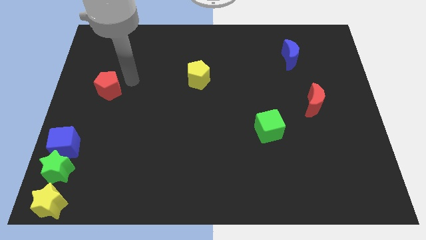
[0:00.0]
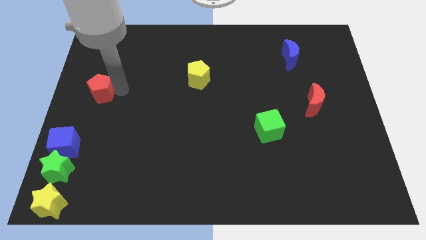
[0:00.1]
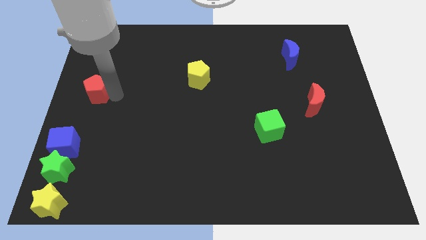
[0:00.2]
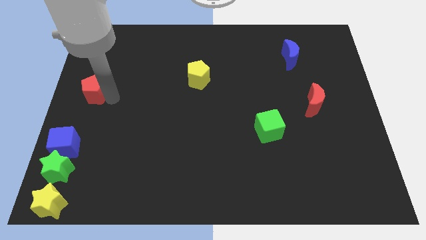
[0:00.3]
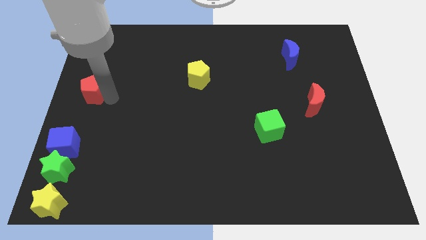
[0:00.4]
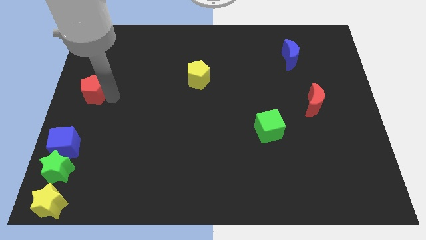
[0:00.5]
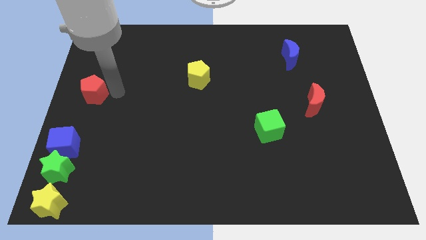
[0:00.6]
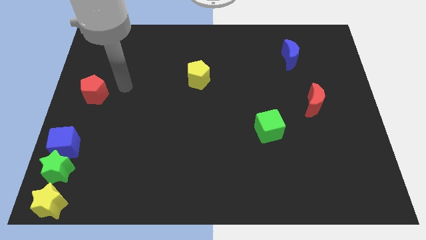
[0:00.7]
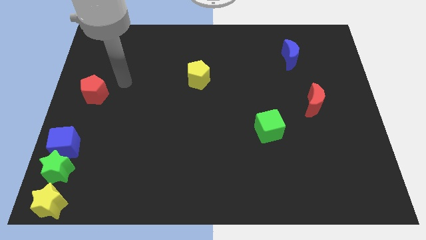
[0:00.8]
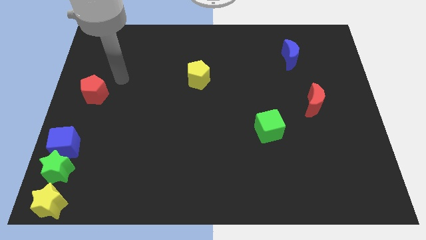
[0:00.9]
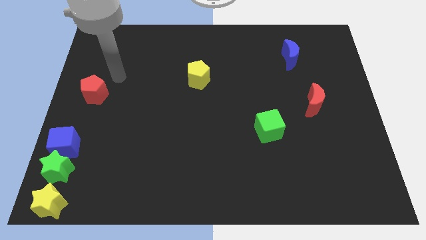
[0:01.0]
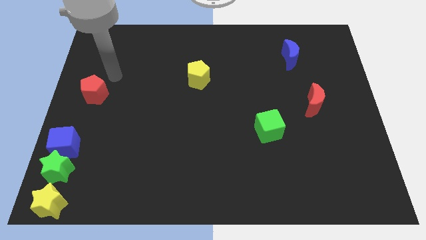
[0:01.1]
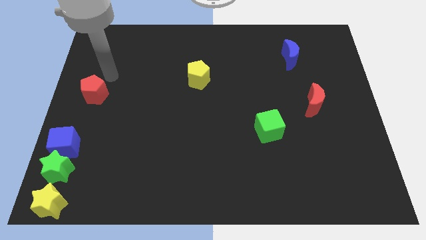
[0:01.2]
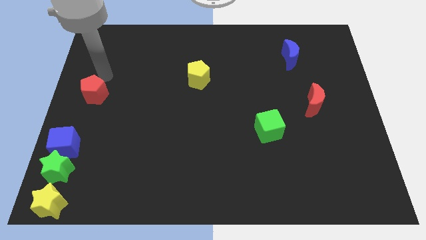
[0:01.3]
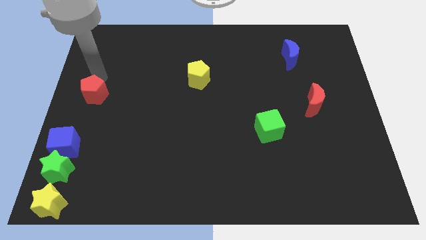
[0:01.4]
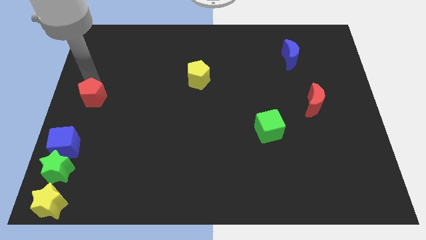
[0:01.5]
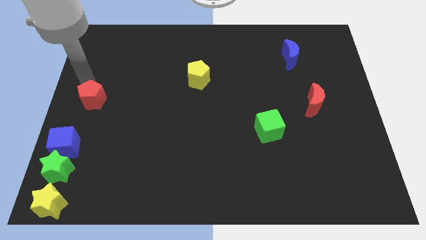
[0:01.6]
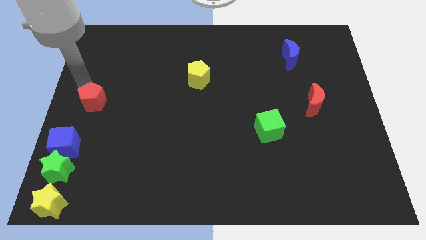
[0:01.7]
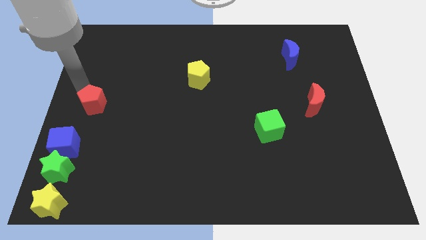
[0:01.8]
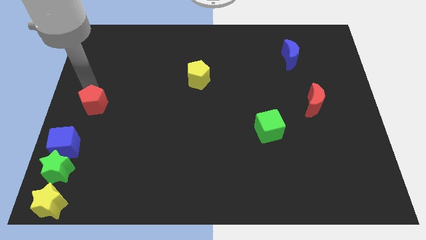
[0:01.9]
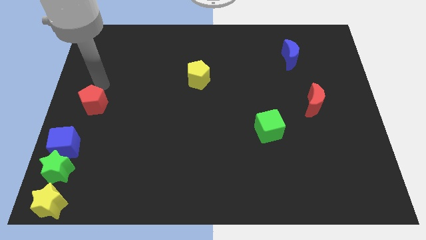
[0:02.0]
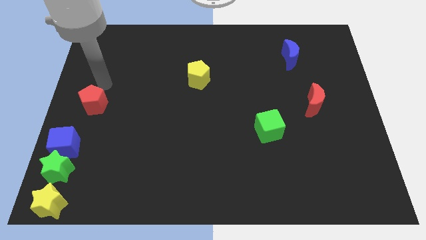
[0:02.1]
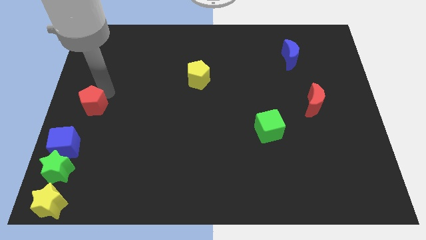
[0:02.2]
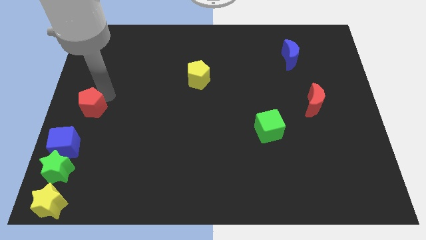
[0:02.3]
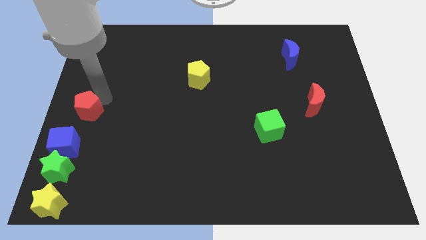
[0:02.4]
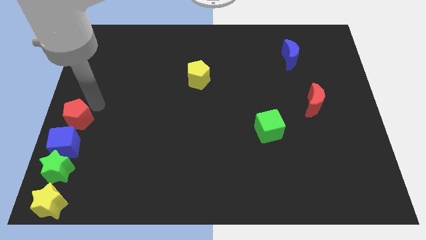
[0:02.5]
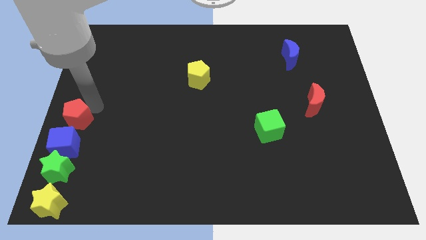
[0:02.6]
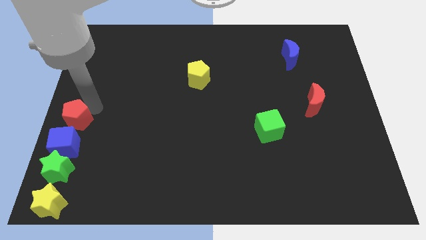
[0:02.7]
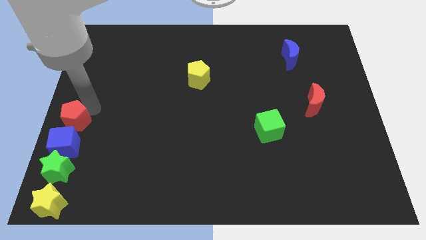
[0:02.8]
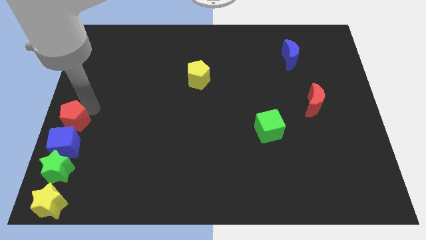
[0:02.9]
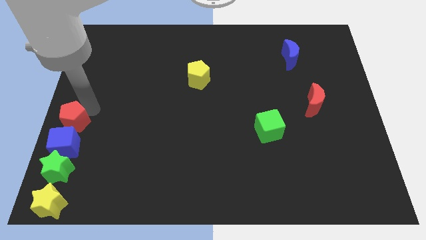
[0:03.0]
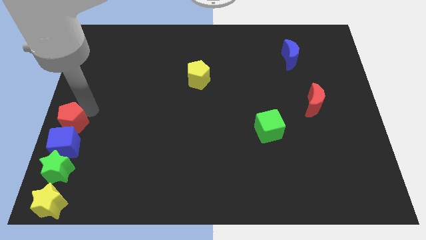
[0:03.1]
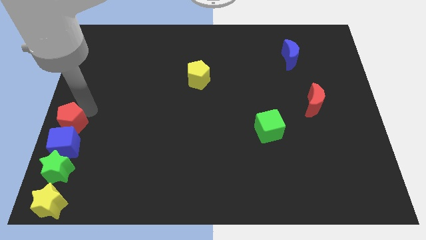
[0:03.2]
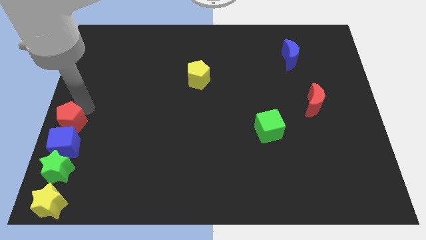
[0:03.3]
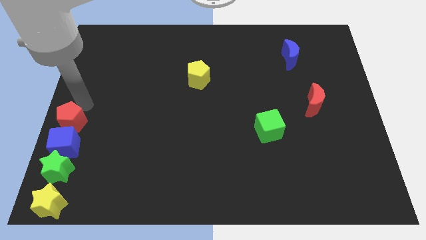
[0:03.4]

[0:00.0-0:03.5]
push the red pentagon to the top of the blue cube

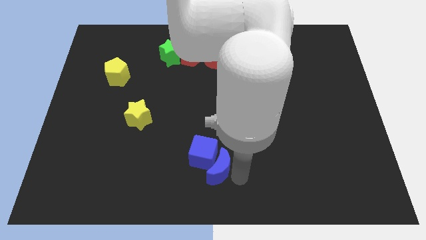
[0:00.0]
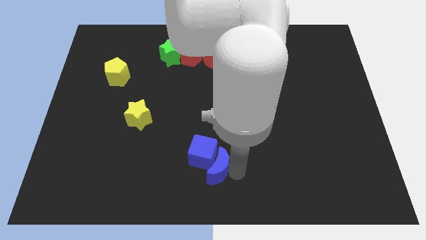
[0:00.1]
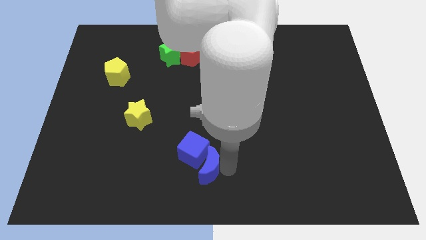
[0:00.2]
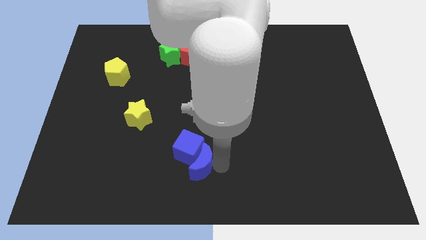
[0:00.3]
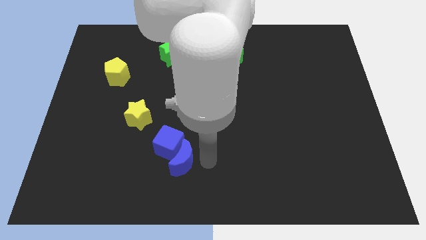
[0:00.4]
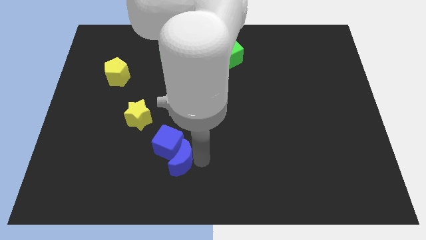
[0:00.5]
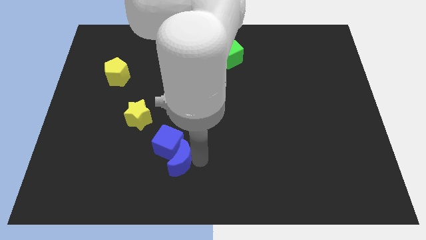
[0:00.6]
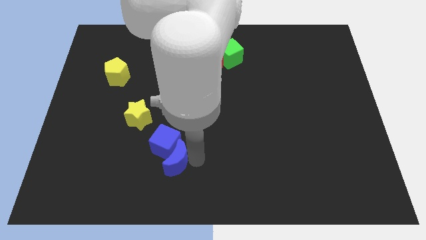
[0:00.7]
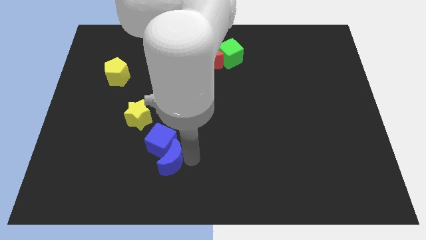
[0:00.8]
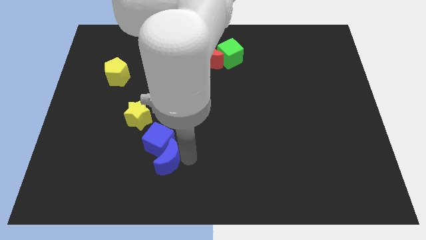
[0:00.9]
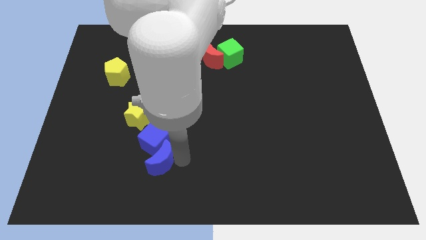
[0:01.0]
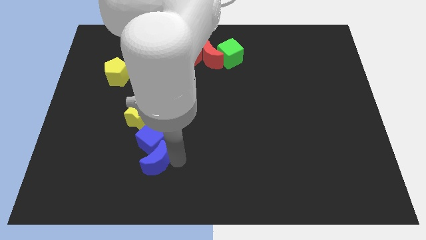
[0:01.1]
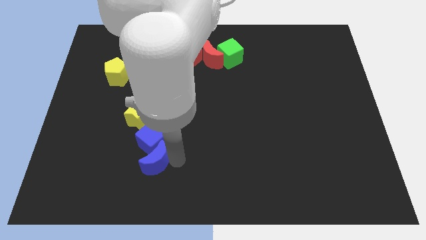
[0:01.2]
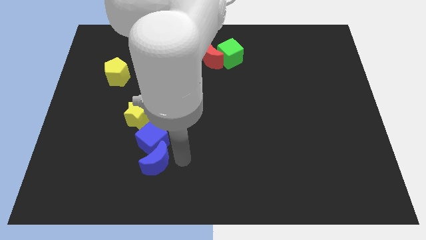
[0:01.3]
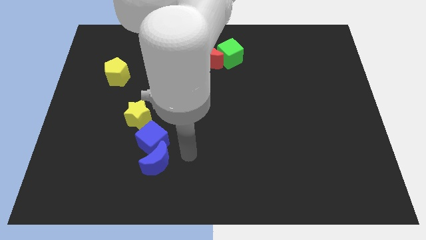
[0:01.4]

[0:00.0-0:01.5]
push the blue crescent along with the blue cube to the left of the board

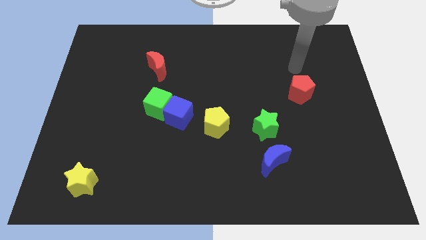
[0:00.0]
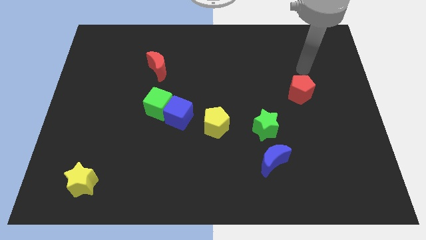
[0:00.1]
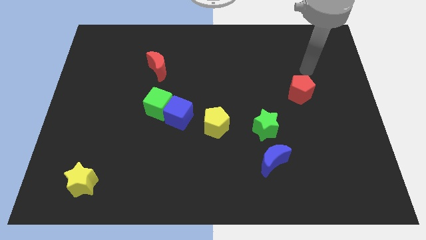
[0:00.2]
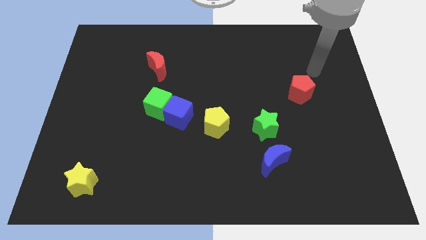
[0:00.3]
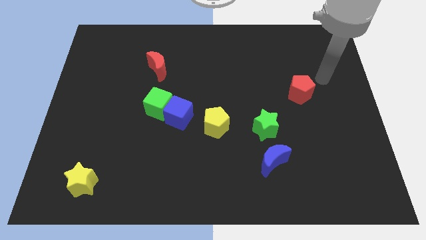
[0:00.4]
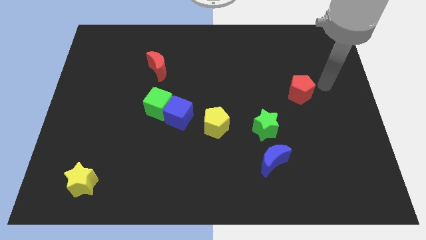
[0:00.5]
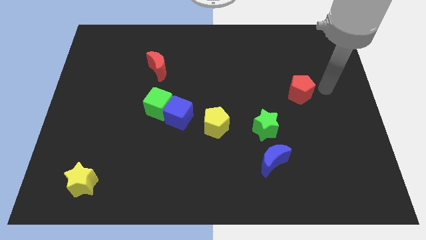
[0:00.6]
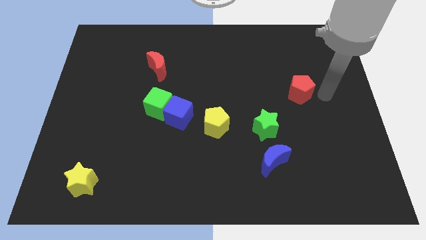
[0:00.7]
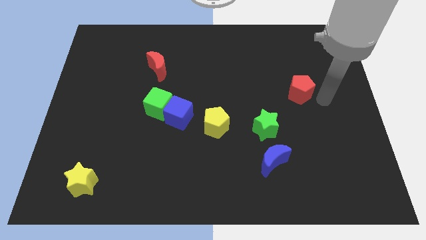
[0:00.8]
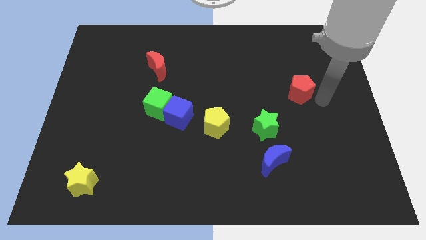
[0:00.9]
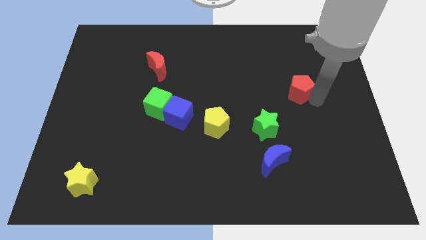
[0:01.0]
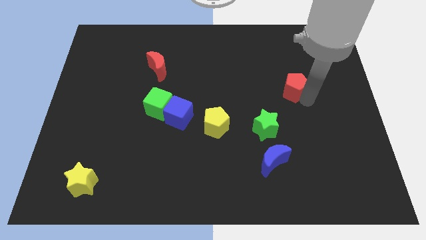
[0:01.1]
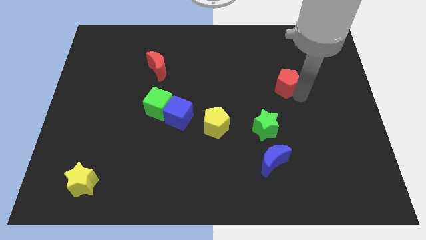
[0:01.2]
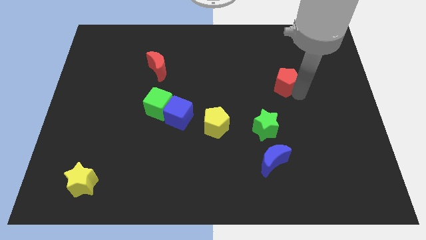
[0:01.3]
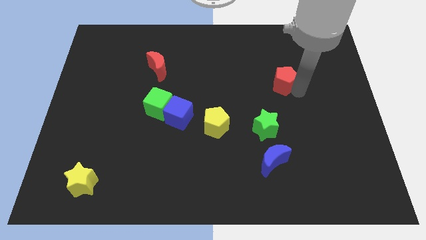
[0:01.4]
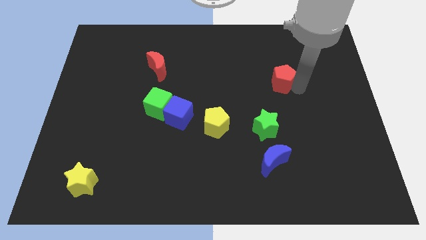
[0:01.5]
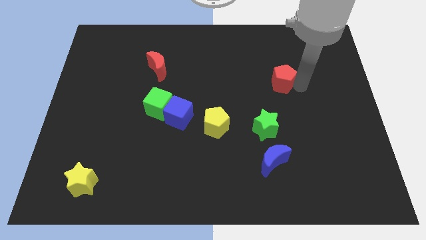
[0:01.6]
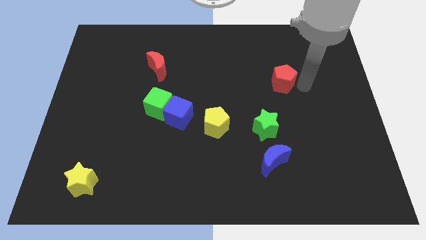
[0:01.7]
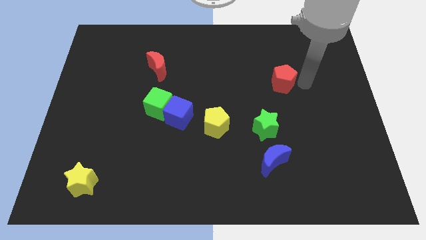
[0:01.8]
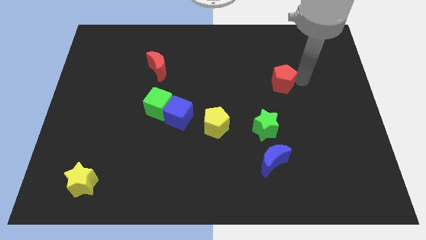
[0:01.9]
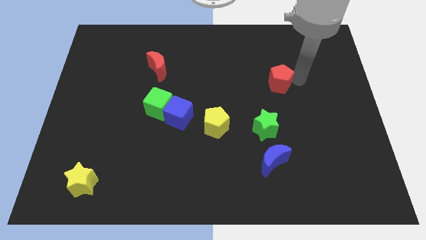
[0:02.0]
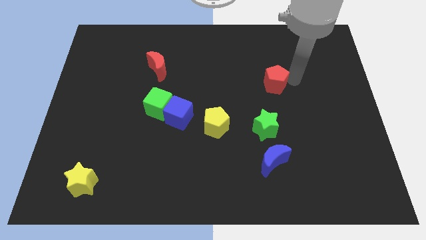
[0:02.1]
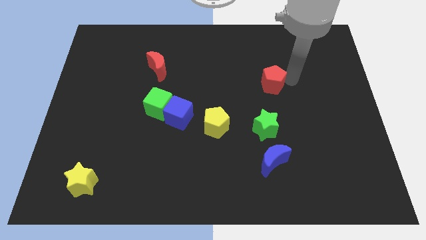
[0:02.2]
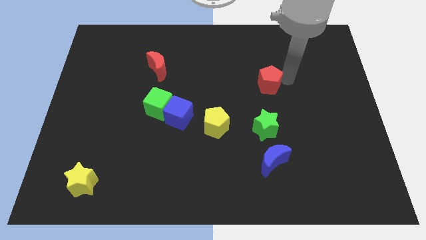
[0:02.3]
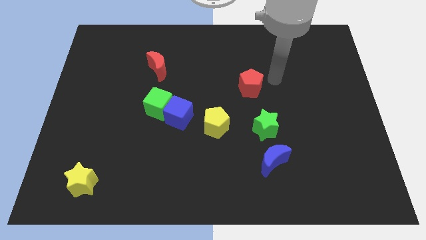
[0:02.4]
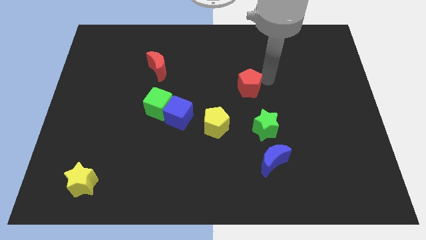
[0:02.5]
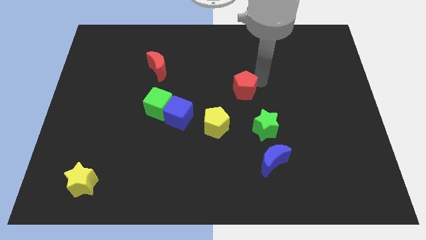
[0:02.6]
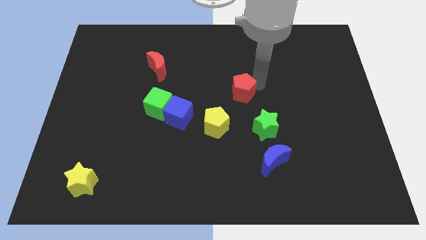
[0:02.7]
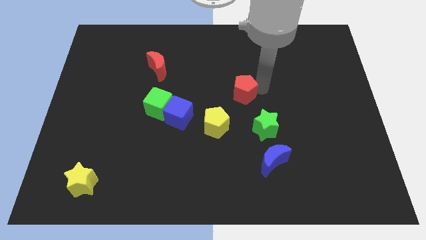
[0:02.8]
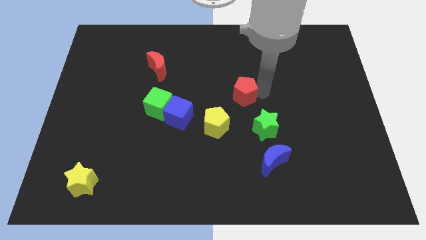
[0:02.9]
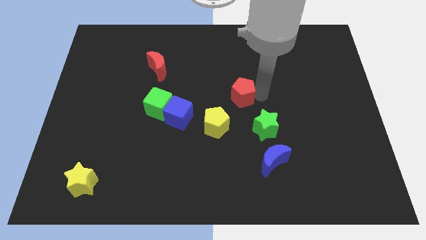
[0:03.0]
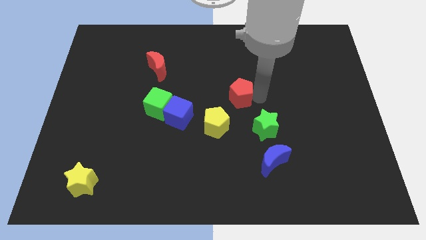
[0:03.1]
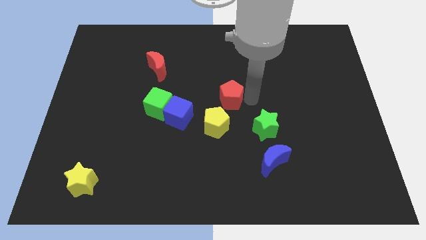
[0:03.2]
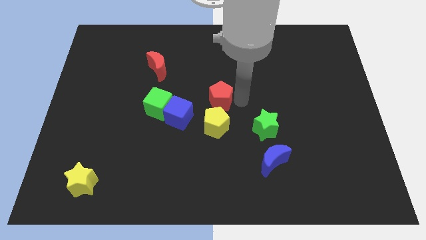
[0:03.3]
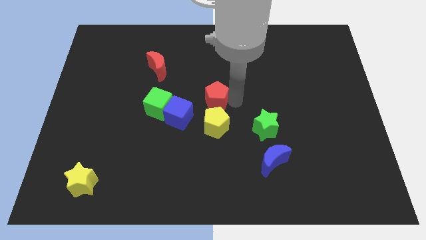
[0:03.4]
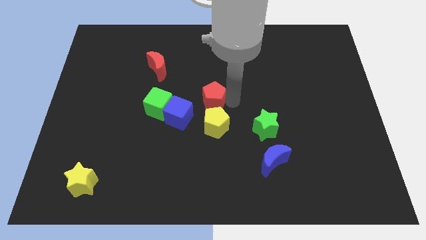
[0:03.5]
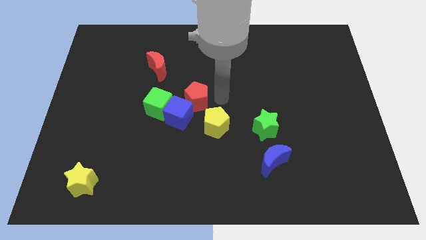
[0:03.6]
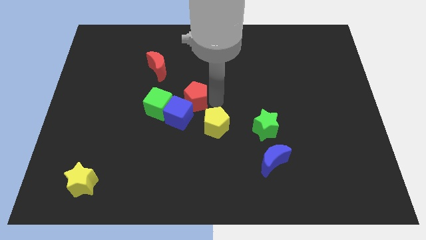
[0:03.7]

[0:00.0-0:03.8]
place the red pentagon close to the blue cube

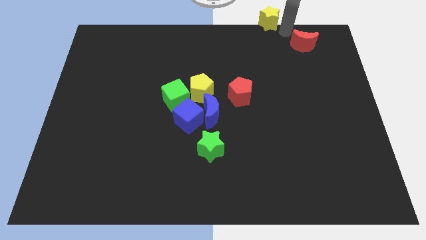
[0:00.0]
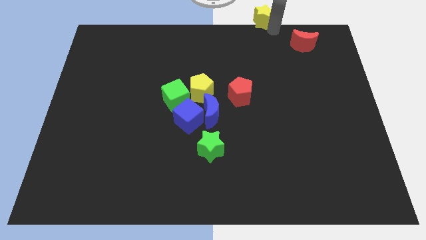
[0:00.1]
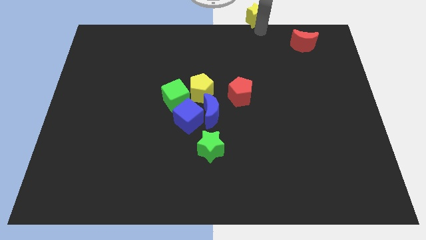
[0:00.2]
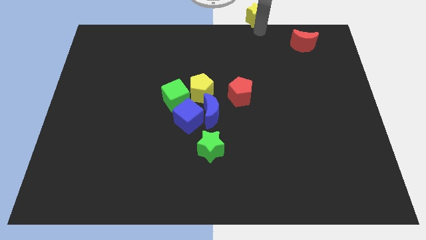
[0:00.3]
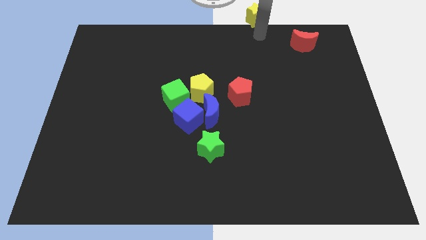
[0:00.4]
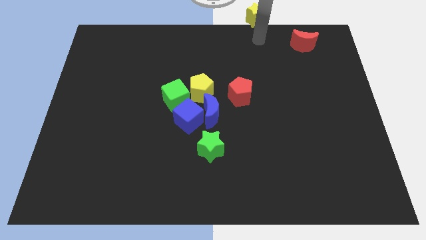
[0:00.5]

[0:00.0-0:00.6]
move the yellow star slightly towards the left
